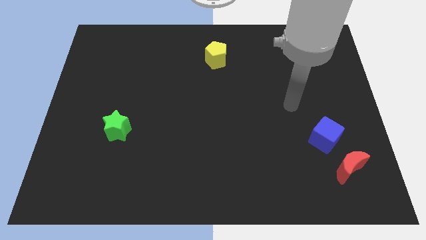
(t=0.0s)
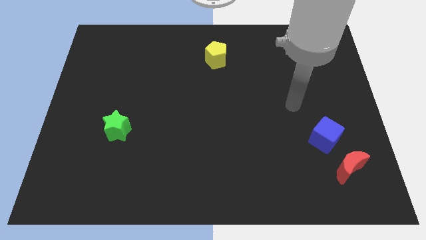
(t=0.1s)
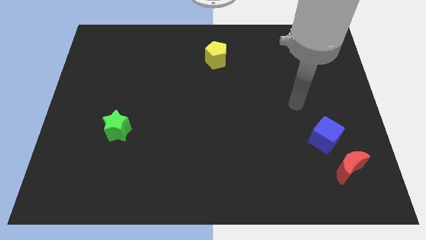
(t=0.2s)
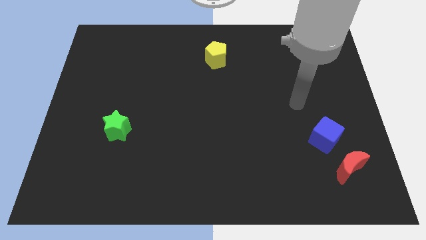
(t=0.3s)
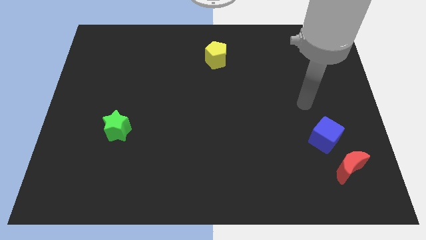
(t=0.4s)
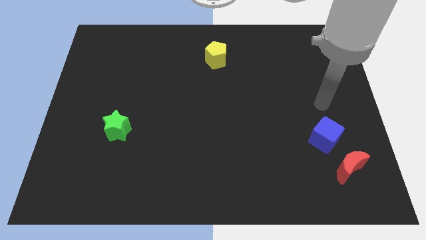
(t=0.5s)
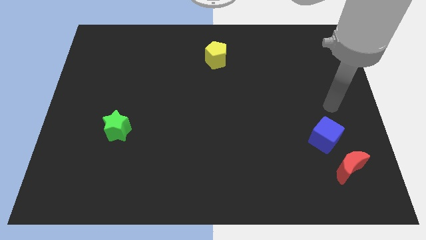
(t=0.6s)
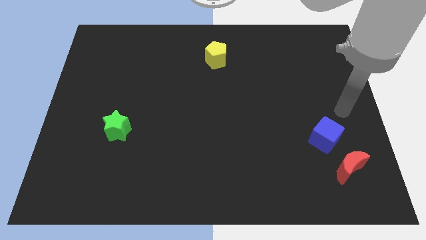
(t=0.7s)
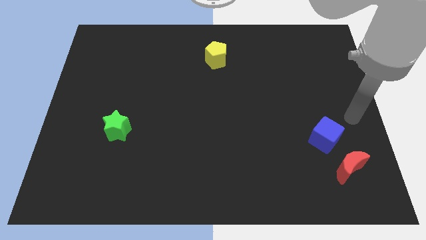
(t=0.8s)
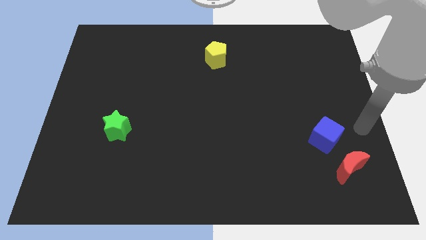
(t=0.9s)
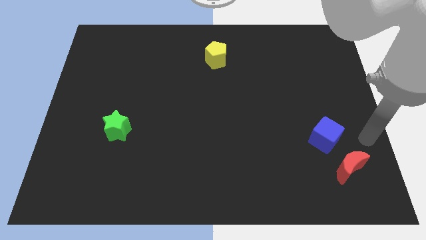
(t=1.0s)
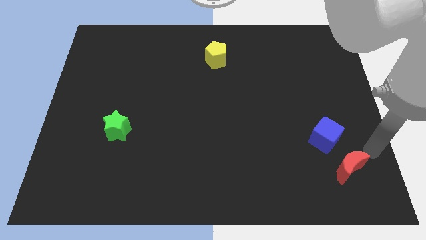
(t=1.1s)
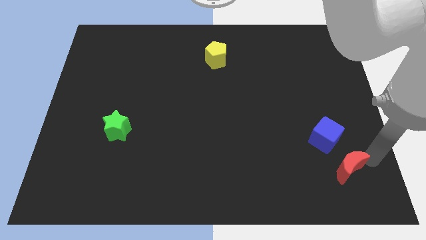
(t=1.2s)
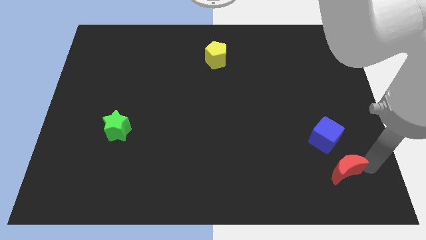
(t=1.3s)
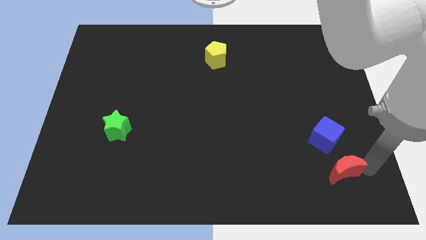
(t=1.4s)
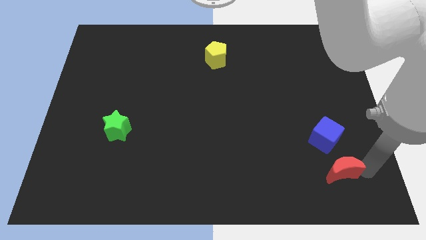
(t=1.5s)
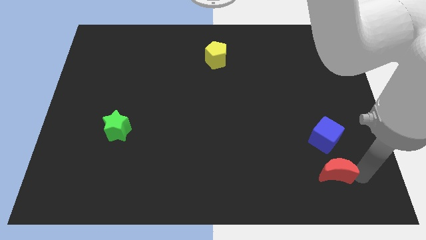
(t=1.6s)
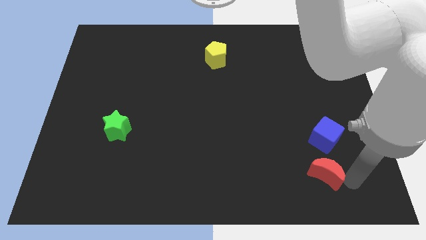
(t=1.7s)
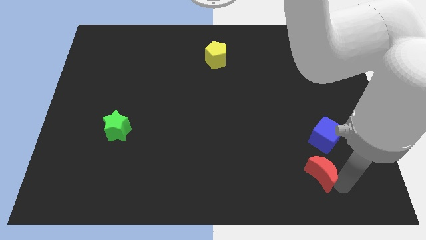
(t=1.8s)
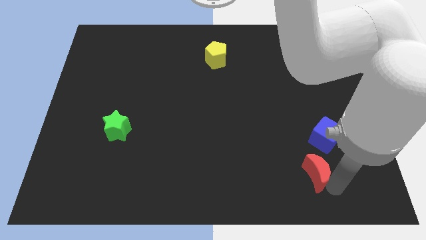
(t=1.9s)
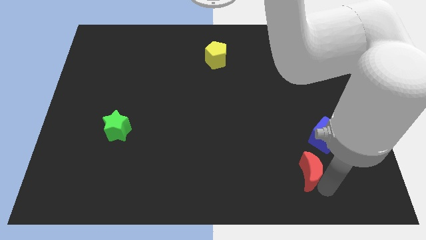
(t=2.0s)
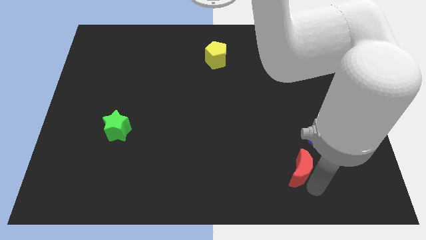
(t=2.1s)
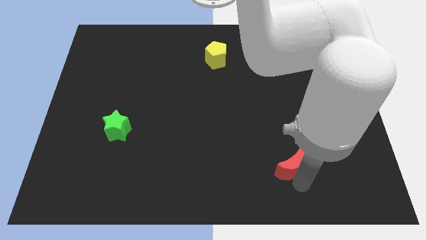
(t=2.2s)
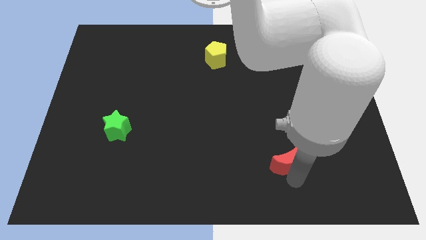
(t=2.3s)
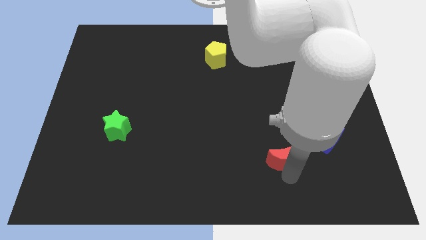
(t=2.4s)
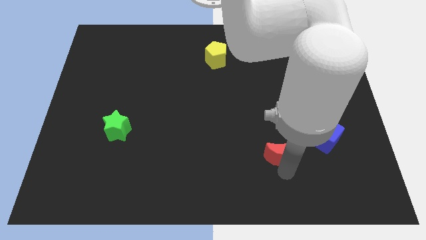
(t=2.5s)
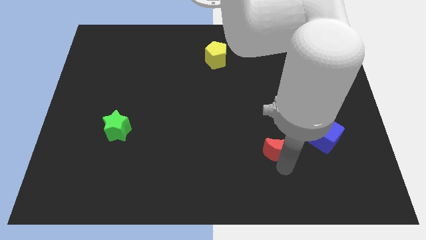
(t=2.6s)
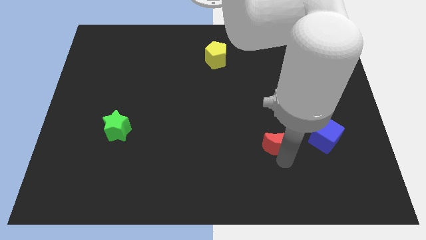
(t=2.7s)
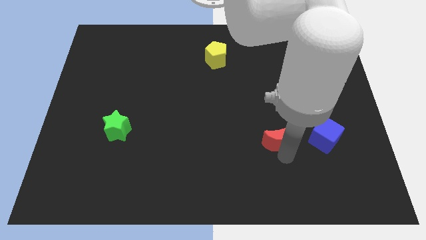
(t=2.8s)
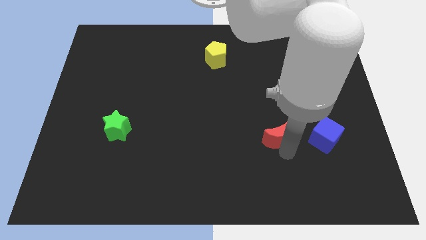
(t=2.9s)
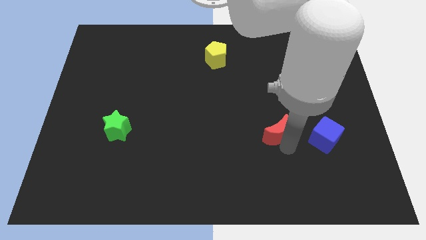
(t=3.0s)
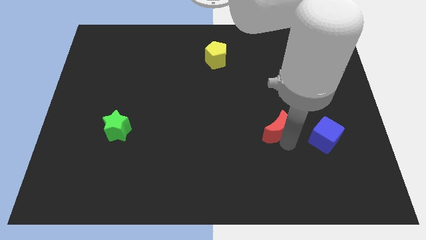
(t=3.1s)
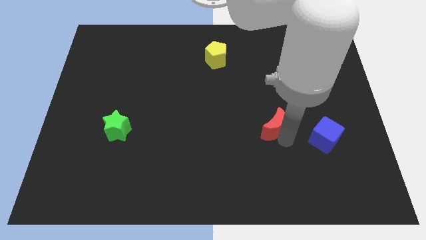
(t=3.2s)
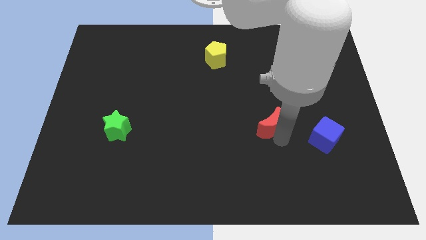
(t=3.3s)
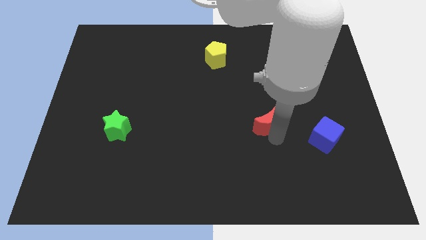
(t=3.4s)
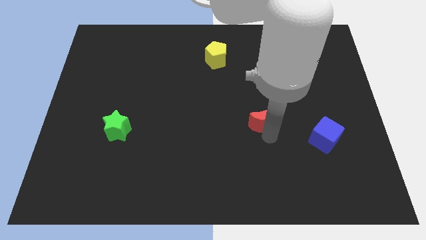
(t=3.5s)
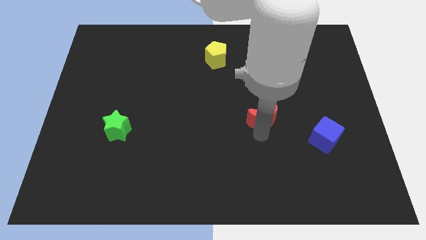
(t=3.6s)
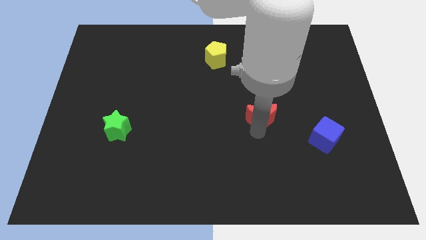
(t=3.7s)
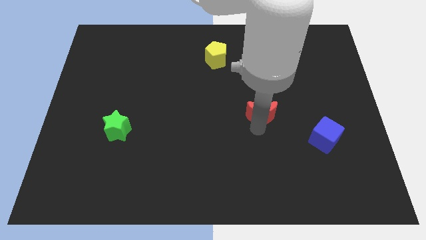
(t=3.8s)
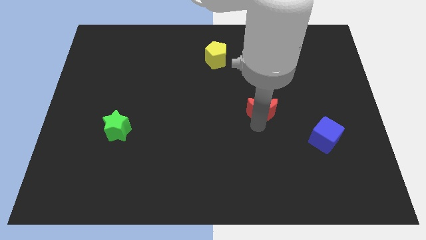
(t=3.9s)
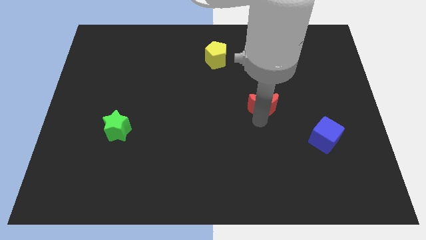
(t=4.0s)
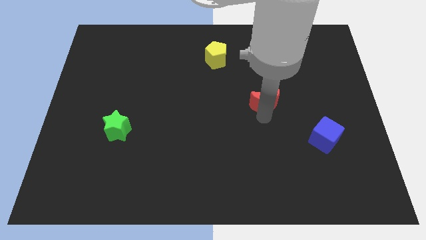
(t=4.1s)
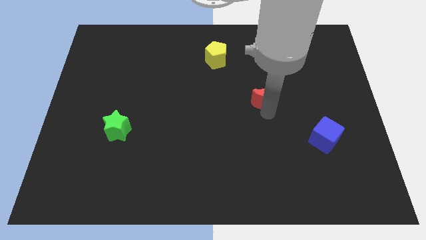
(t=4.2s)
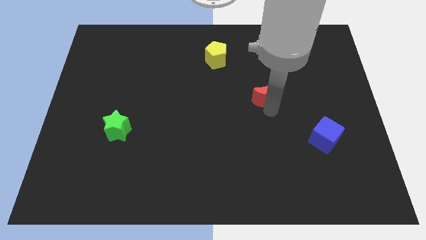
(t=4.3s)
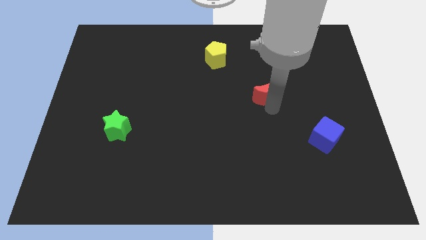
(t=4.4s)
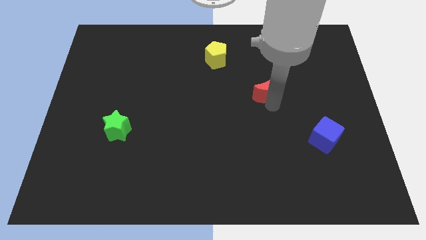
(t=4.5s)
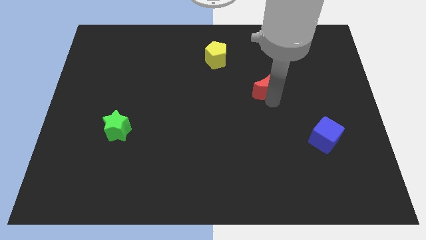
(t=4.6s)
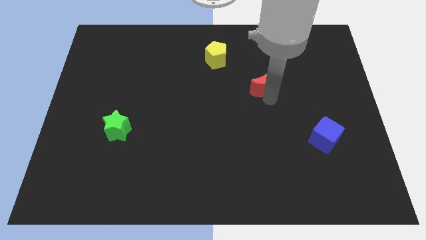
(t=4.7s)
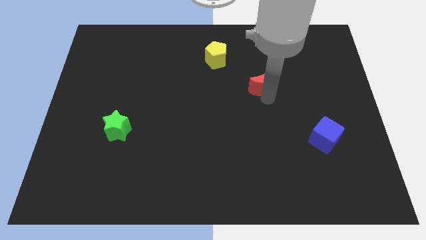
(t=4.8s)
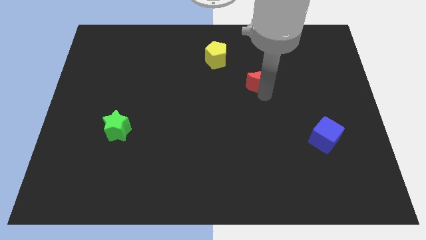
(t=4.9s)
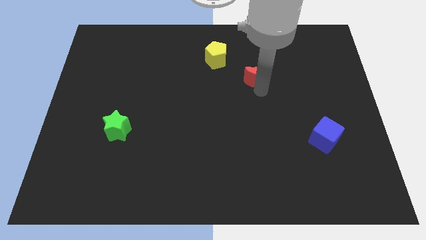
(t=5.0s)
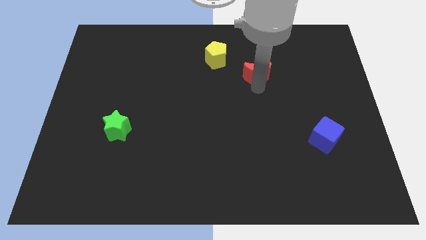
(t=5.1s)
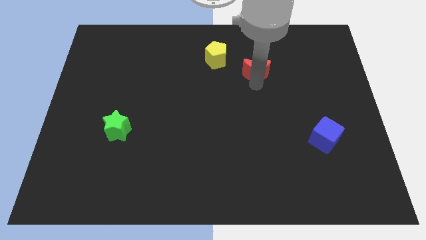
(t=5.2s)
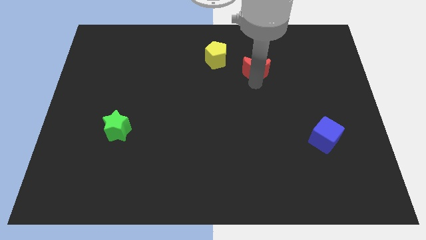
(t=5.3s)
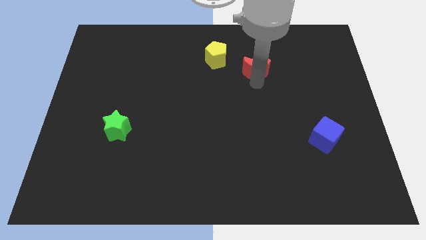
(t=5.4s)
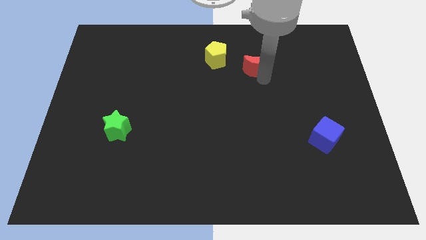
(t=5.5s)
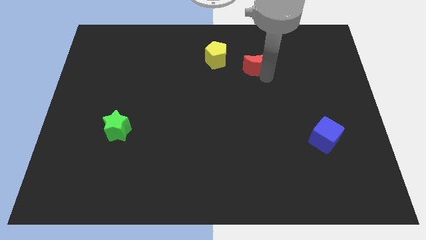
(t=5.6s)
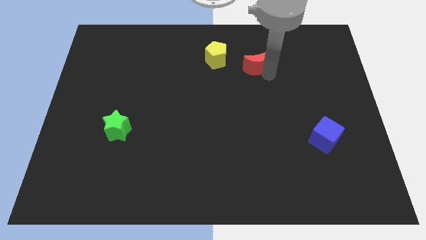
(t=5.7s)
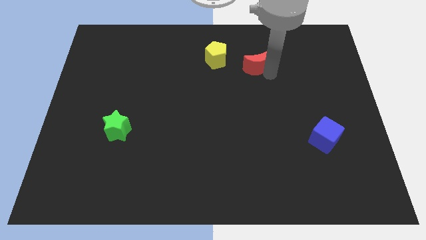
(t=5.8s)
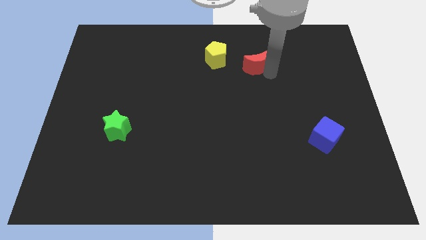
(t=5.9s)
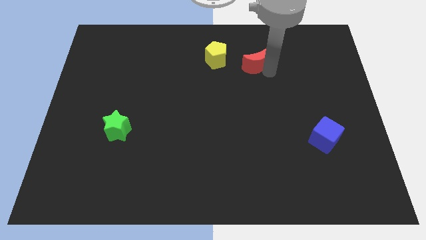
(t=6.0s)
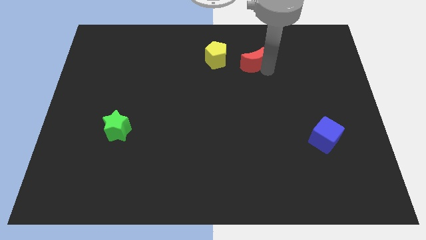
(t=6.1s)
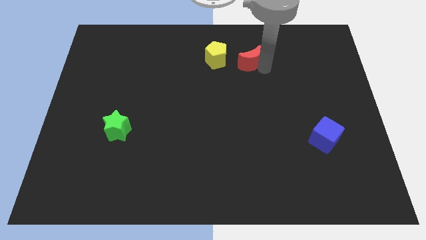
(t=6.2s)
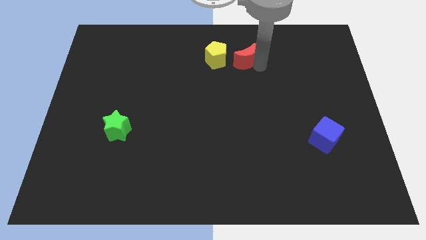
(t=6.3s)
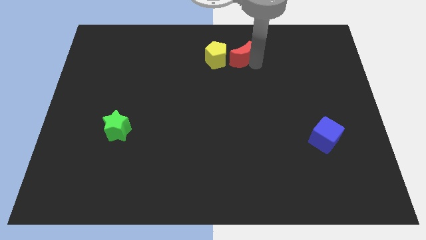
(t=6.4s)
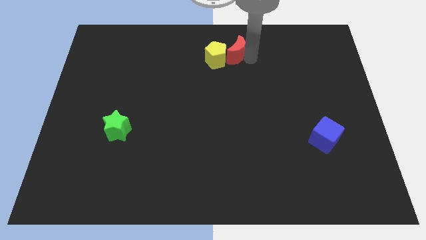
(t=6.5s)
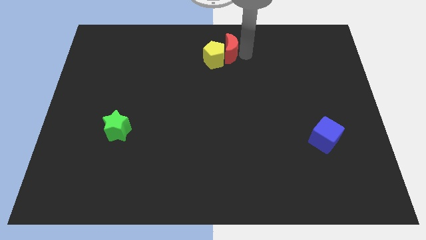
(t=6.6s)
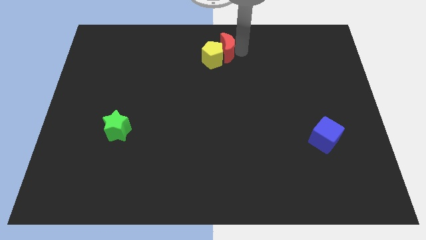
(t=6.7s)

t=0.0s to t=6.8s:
slide the moon towards the yellow block

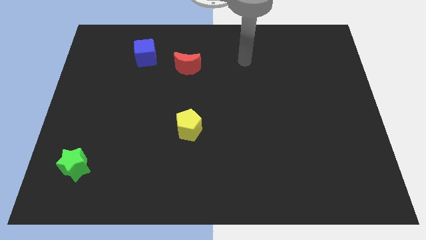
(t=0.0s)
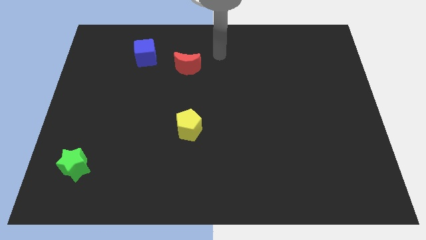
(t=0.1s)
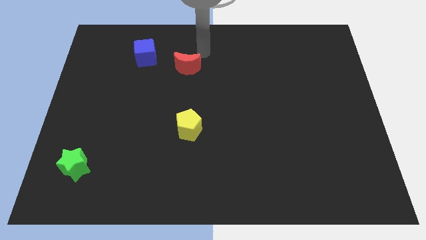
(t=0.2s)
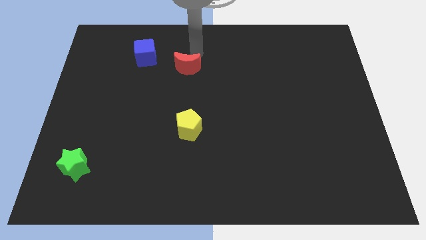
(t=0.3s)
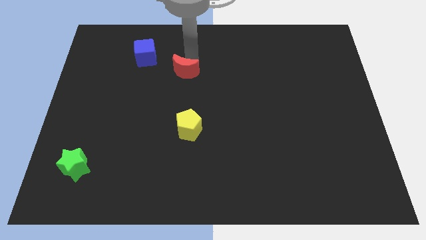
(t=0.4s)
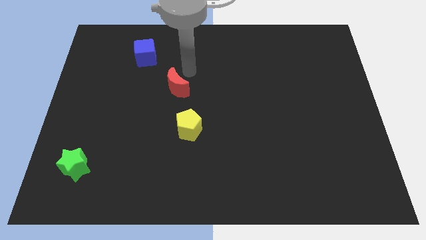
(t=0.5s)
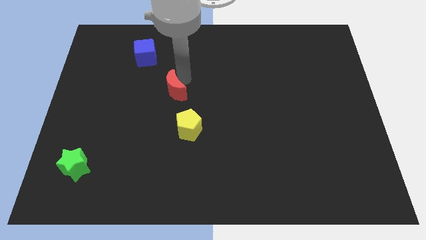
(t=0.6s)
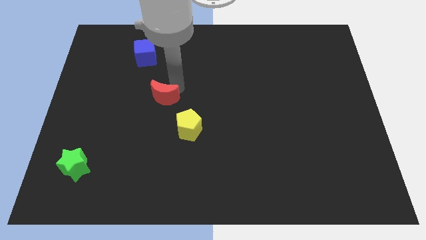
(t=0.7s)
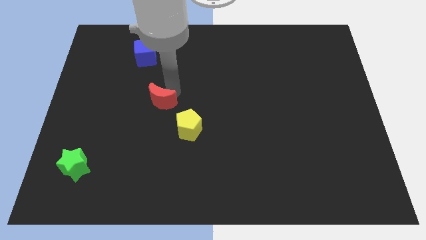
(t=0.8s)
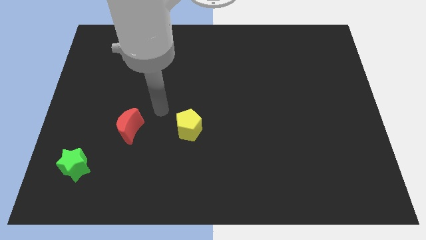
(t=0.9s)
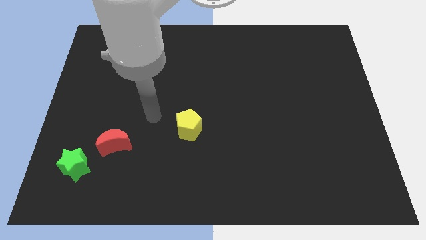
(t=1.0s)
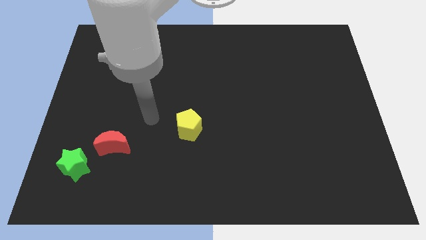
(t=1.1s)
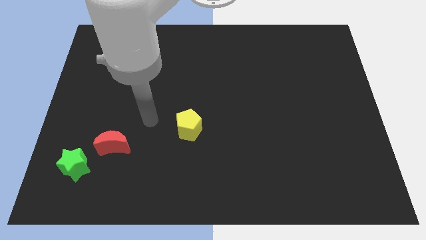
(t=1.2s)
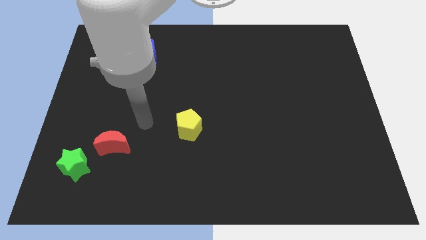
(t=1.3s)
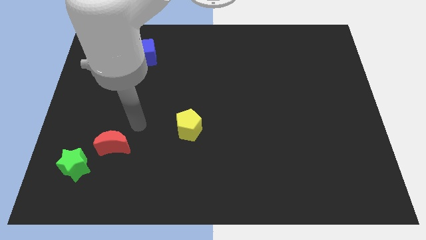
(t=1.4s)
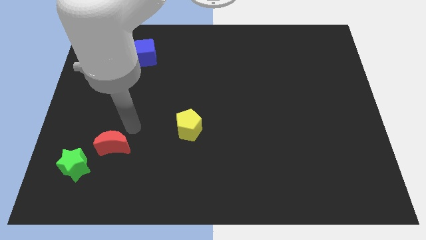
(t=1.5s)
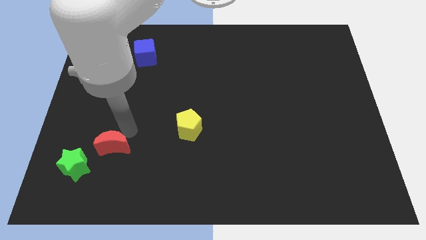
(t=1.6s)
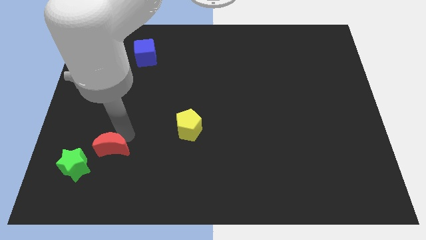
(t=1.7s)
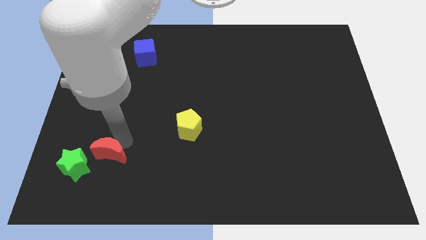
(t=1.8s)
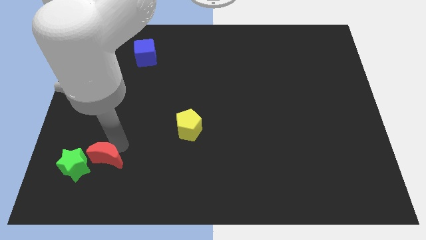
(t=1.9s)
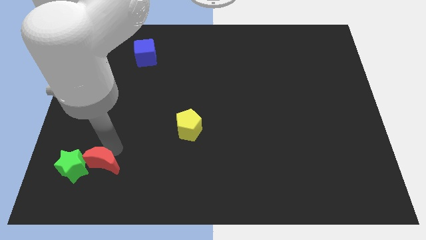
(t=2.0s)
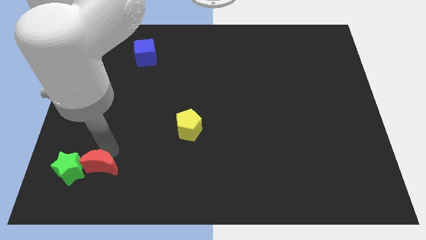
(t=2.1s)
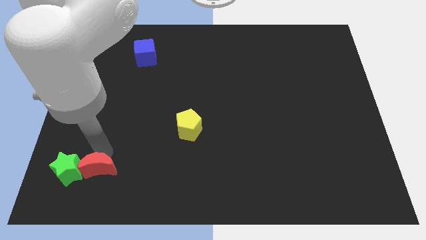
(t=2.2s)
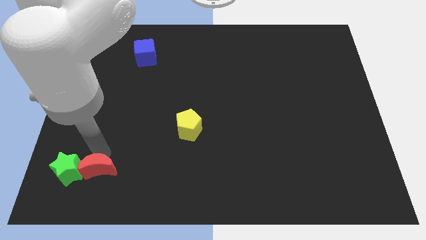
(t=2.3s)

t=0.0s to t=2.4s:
put the red moon to the green star
